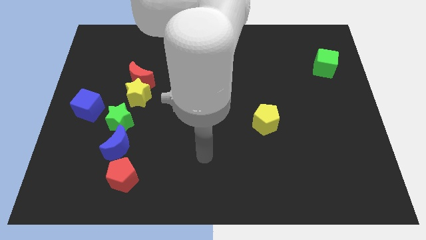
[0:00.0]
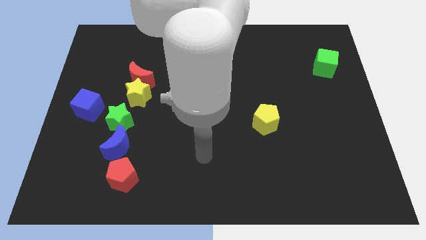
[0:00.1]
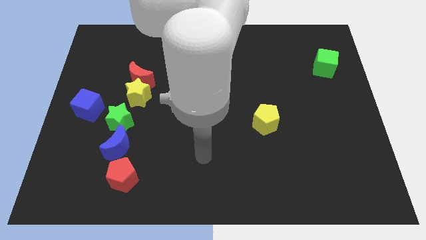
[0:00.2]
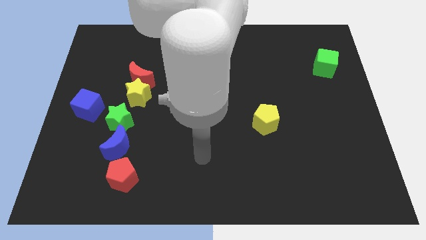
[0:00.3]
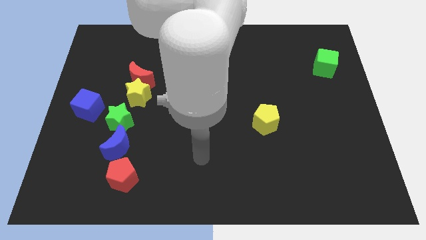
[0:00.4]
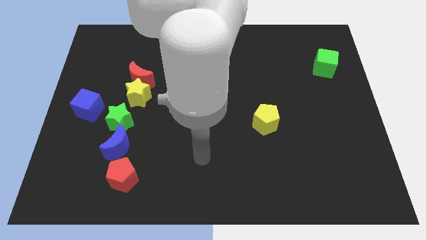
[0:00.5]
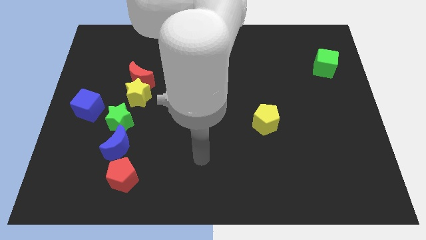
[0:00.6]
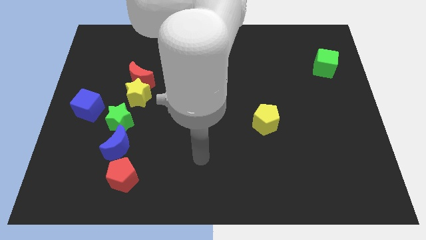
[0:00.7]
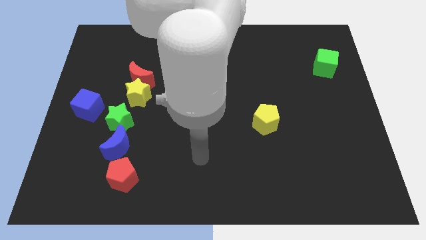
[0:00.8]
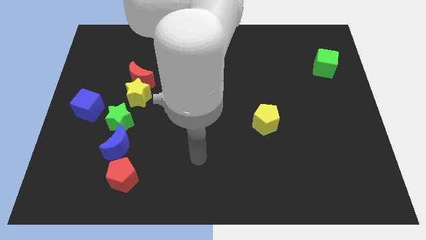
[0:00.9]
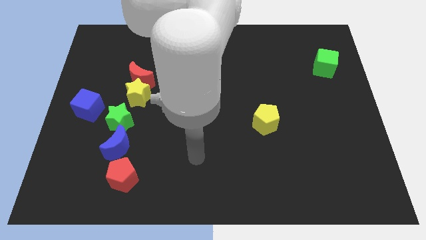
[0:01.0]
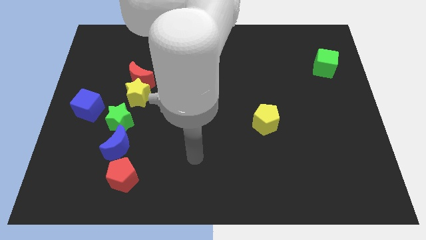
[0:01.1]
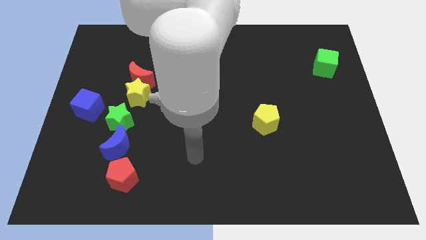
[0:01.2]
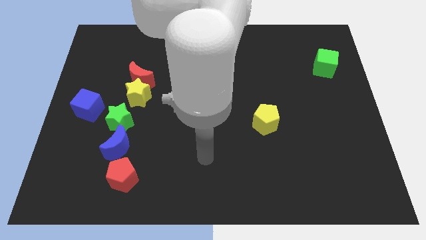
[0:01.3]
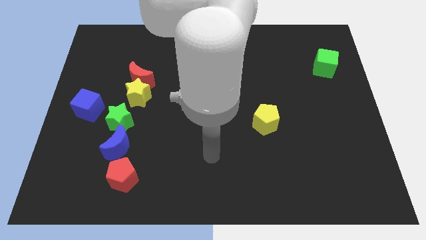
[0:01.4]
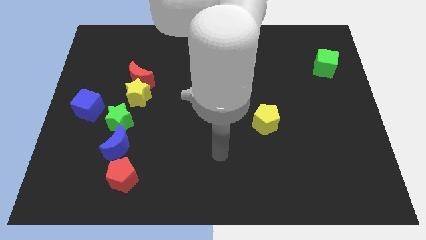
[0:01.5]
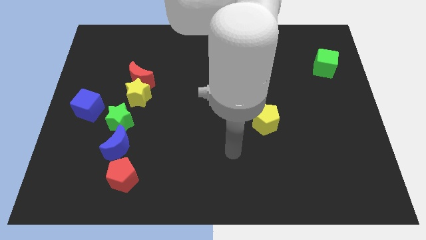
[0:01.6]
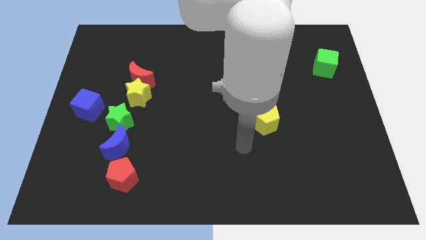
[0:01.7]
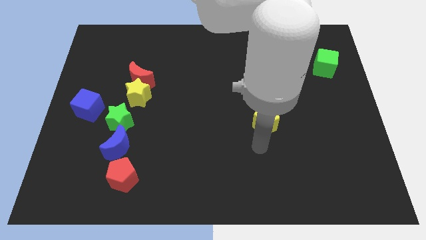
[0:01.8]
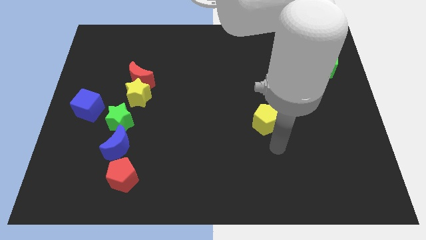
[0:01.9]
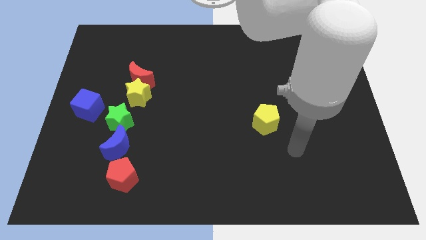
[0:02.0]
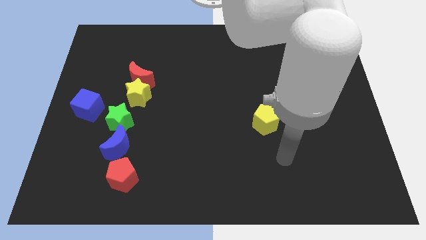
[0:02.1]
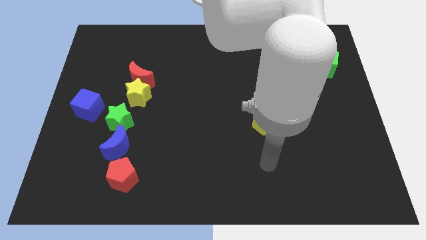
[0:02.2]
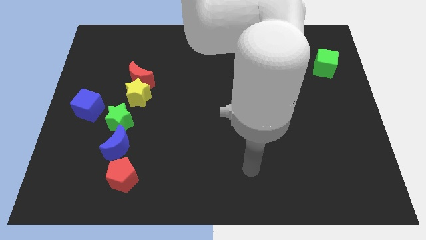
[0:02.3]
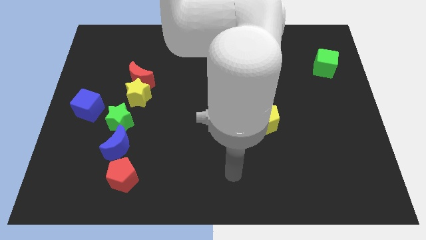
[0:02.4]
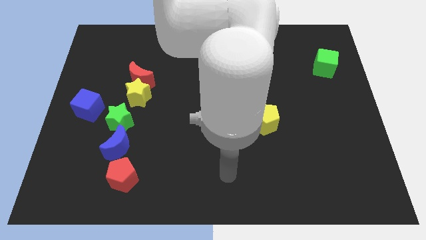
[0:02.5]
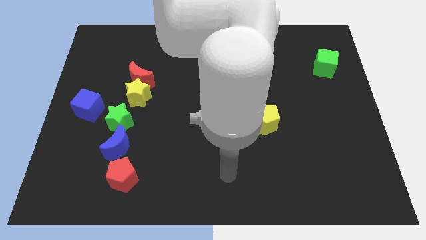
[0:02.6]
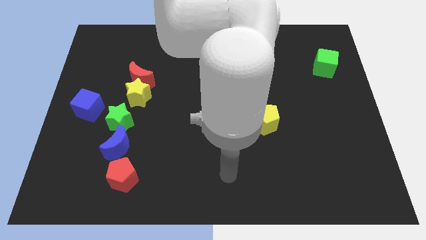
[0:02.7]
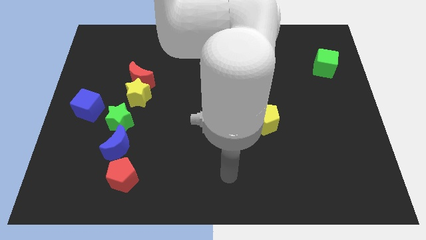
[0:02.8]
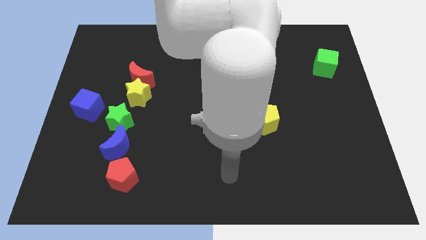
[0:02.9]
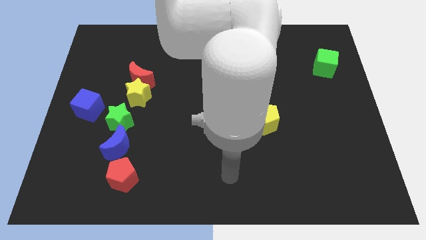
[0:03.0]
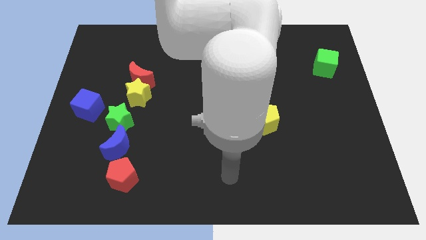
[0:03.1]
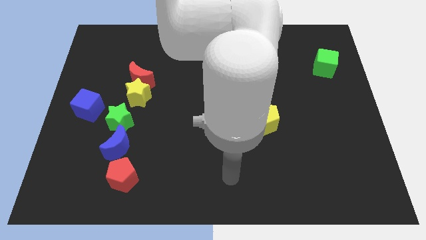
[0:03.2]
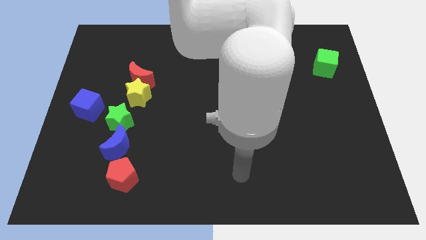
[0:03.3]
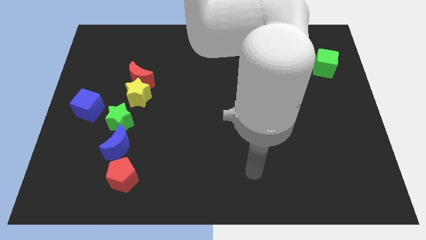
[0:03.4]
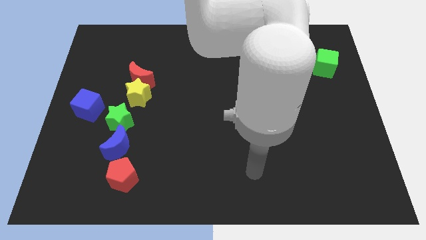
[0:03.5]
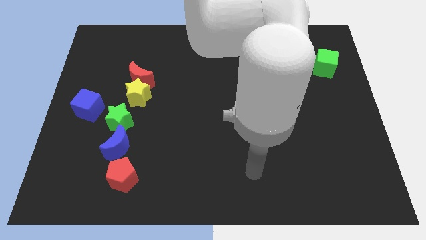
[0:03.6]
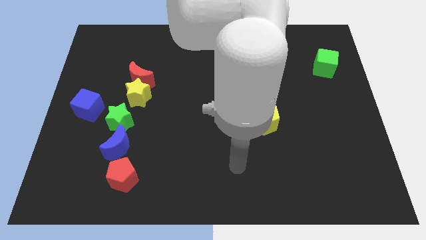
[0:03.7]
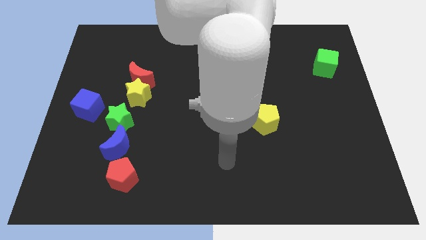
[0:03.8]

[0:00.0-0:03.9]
place your arm to bottom of the yellow penatgon

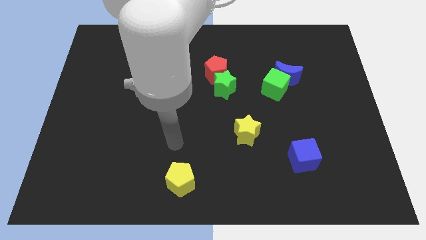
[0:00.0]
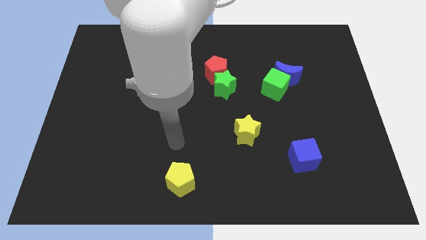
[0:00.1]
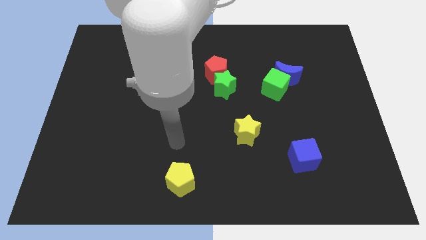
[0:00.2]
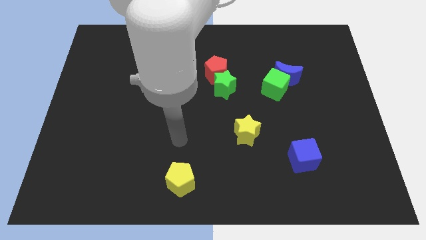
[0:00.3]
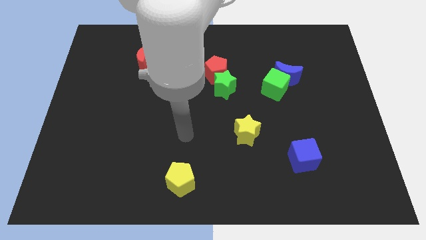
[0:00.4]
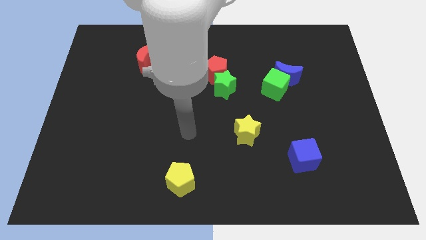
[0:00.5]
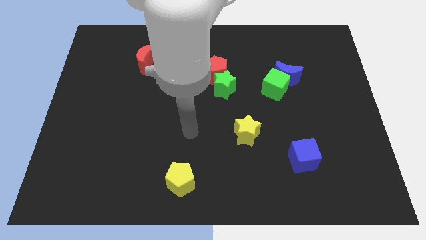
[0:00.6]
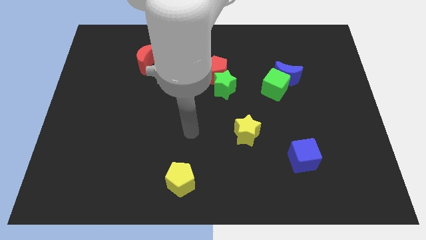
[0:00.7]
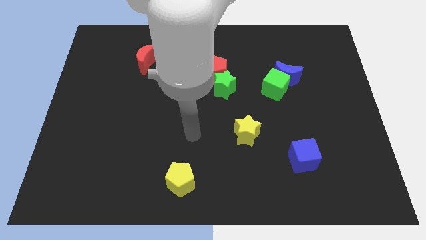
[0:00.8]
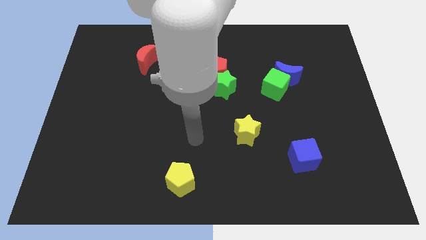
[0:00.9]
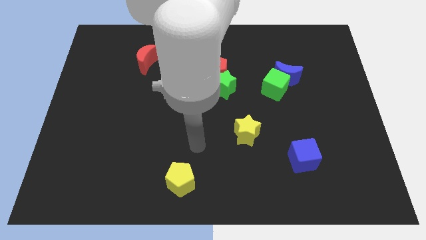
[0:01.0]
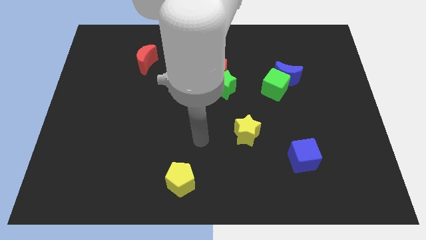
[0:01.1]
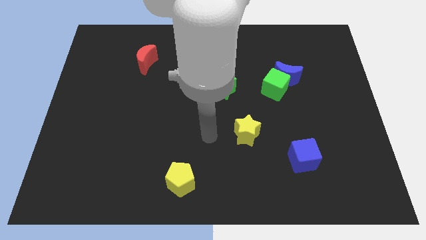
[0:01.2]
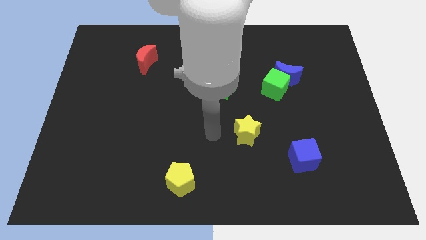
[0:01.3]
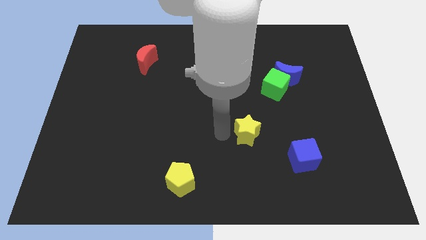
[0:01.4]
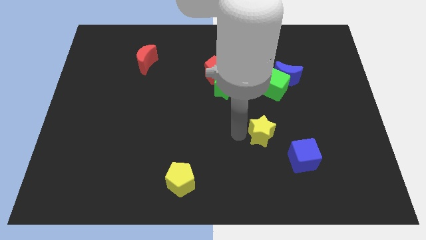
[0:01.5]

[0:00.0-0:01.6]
move your arm close to the yellow star

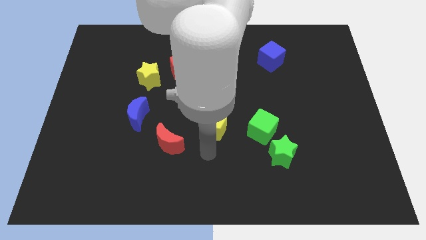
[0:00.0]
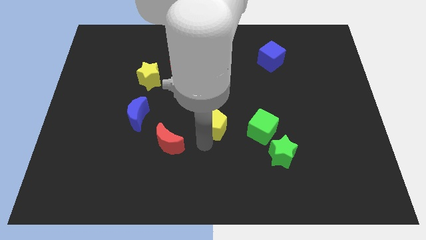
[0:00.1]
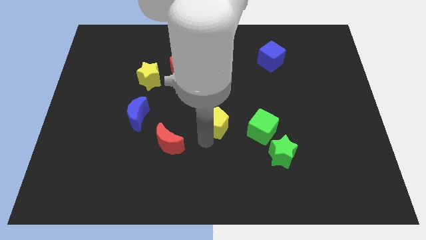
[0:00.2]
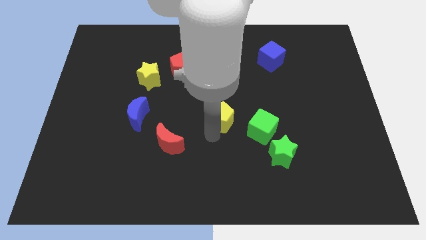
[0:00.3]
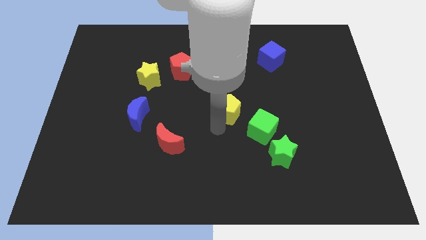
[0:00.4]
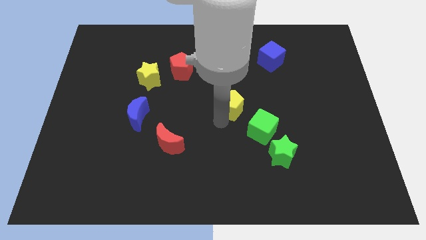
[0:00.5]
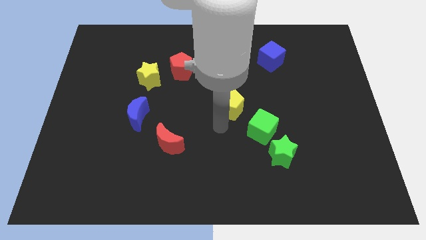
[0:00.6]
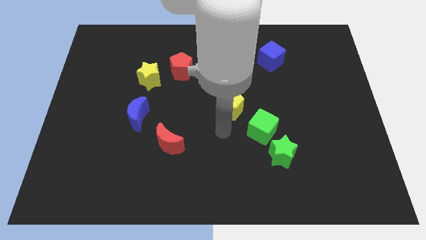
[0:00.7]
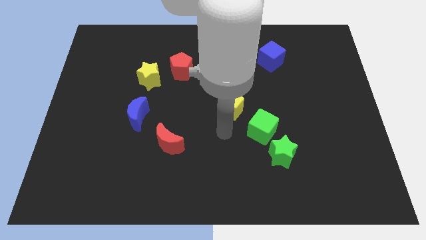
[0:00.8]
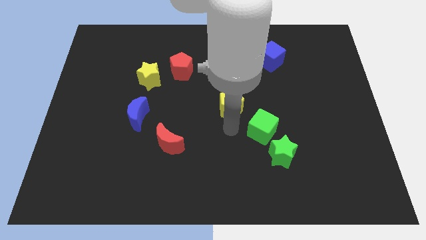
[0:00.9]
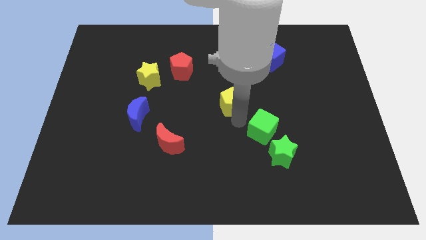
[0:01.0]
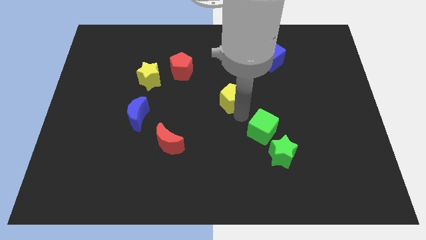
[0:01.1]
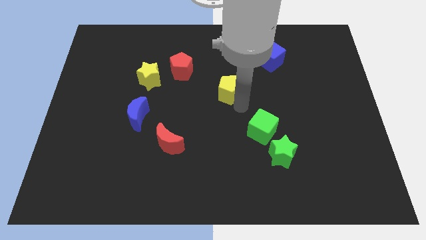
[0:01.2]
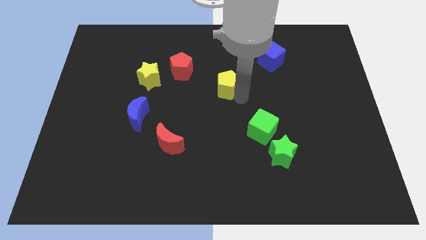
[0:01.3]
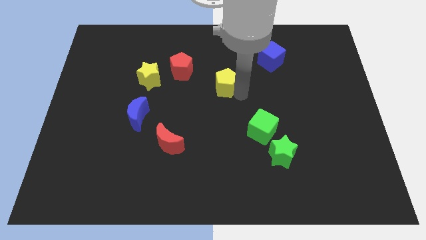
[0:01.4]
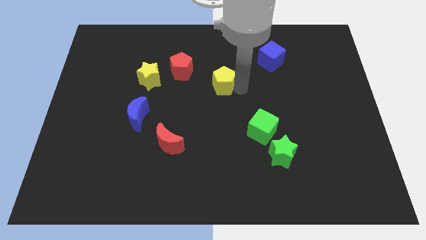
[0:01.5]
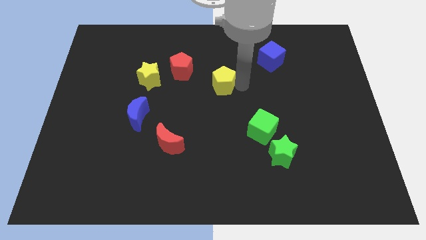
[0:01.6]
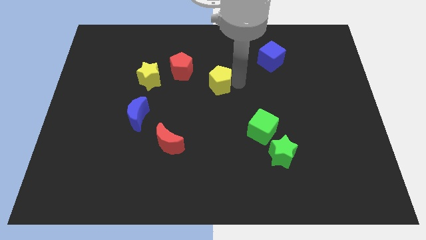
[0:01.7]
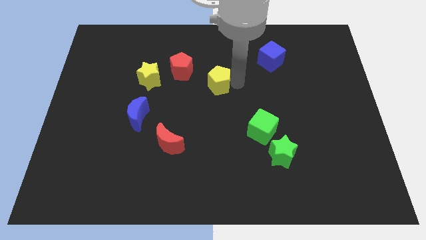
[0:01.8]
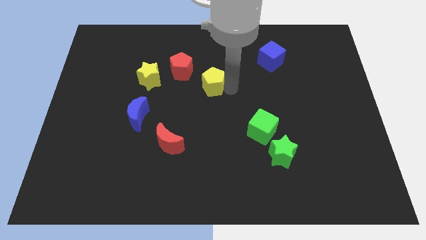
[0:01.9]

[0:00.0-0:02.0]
push the yellow pentagon upward

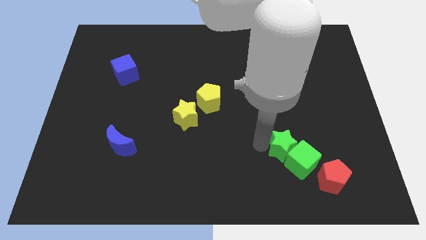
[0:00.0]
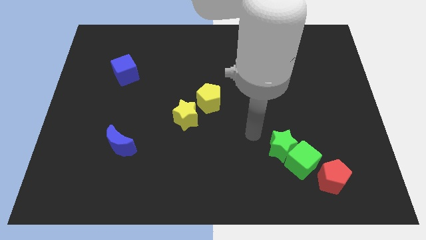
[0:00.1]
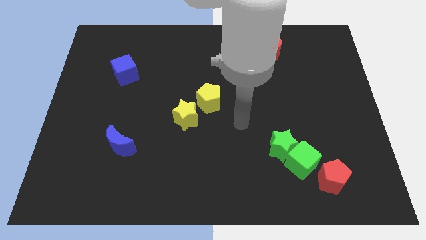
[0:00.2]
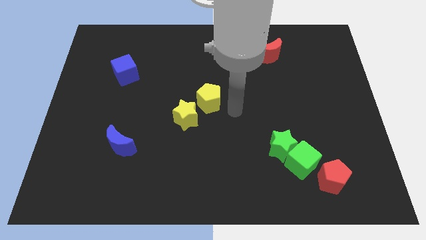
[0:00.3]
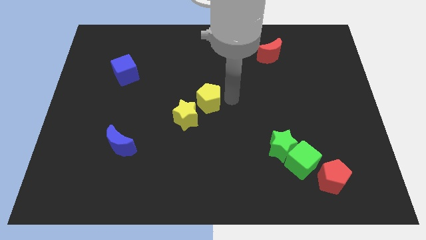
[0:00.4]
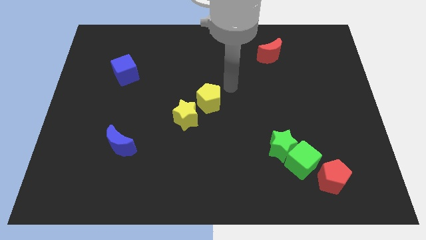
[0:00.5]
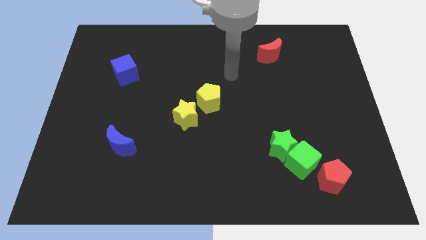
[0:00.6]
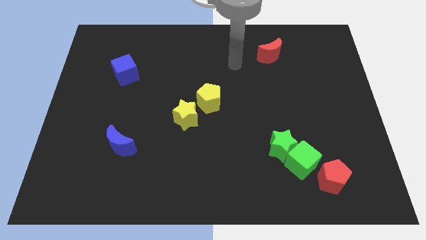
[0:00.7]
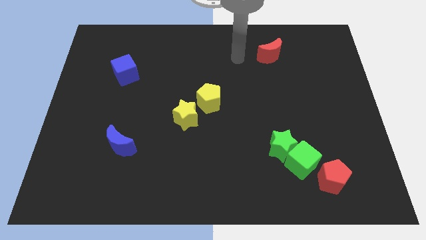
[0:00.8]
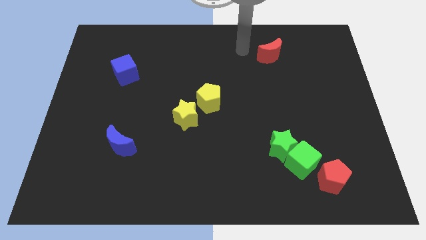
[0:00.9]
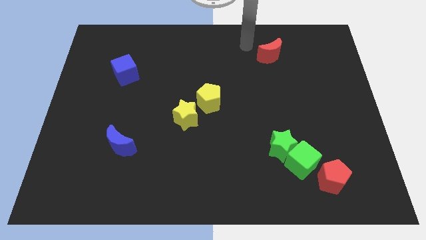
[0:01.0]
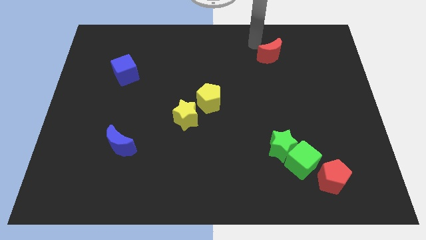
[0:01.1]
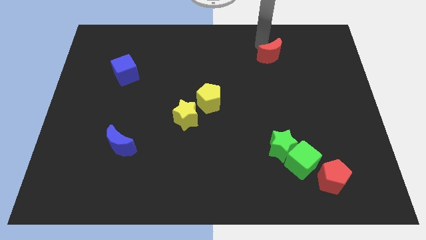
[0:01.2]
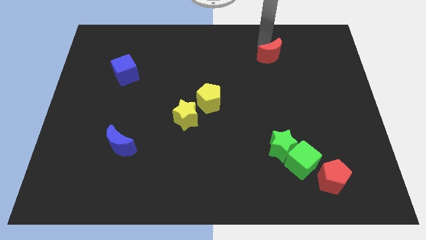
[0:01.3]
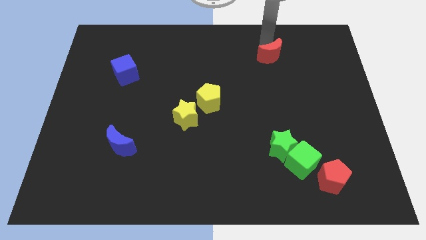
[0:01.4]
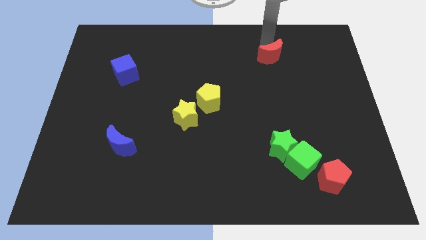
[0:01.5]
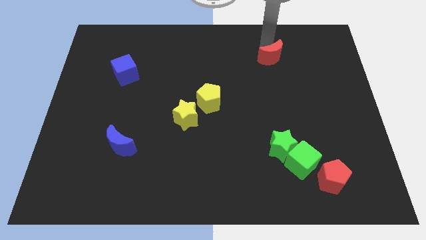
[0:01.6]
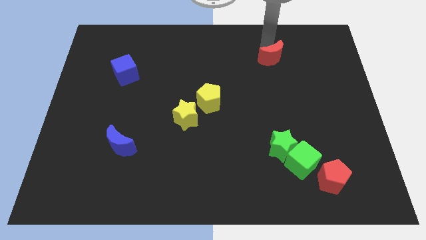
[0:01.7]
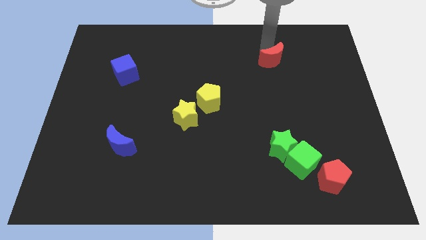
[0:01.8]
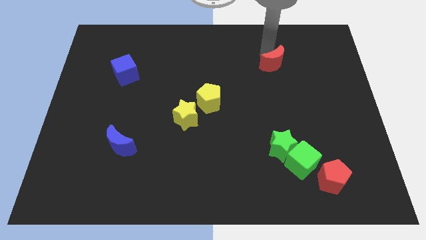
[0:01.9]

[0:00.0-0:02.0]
move the red moon slightly to the bottom of the board
